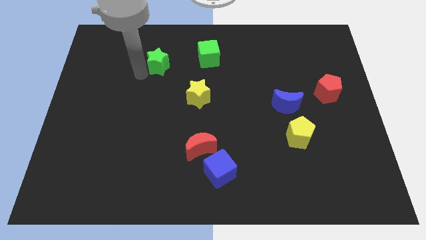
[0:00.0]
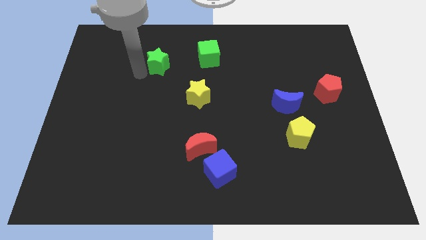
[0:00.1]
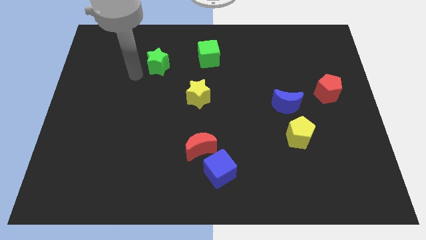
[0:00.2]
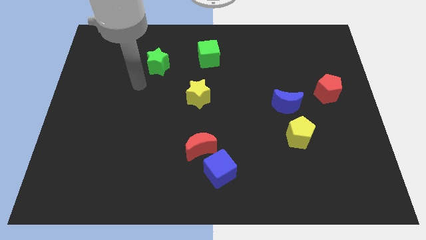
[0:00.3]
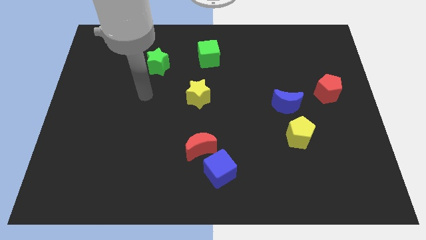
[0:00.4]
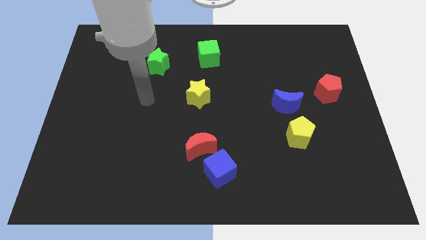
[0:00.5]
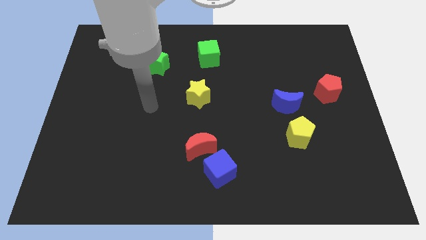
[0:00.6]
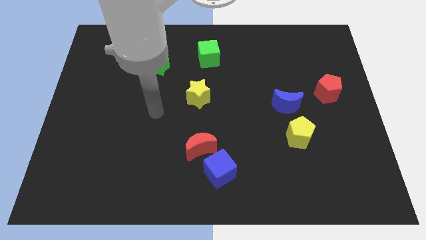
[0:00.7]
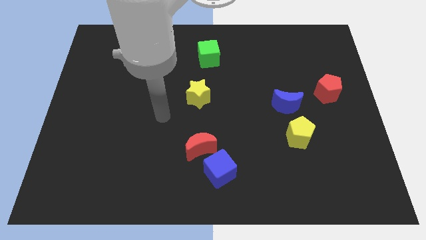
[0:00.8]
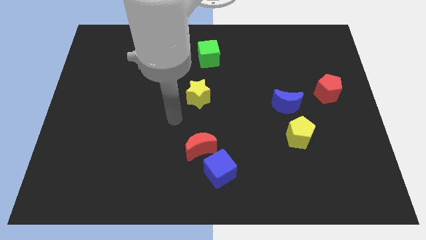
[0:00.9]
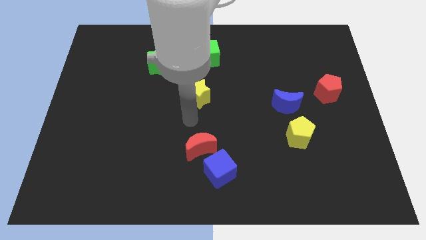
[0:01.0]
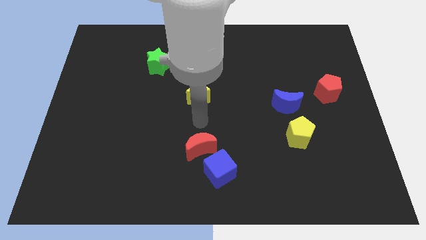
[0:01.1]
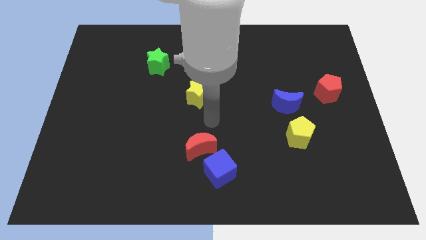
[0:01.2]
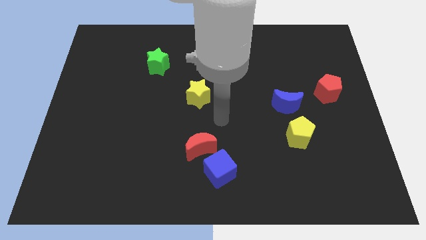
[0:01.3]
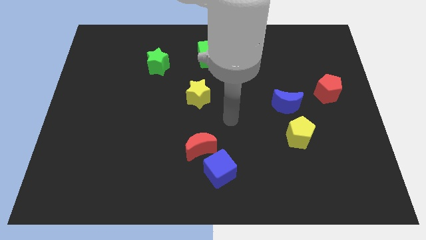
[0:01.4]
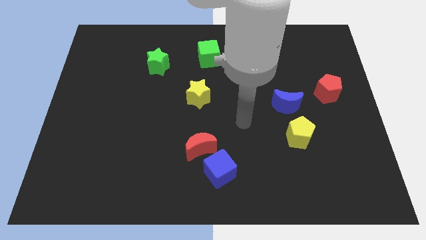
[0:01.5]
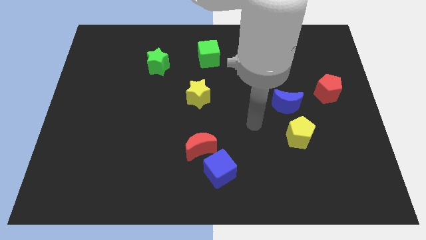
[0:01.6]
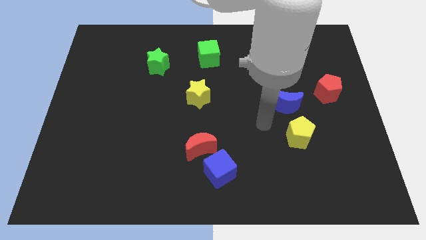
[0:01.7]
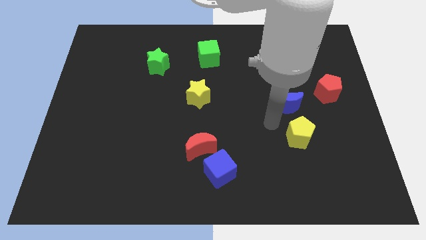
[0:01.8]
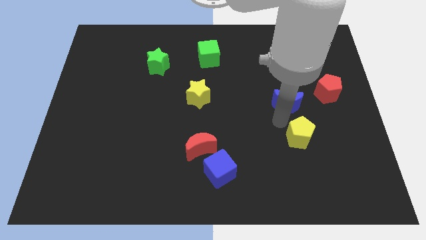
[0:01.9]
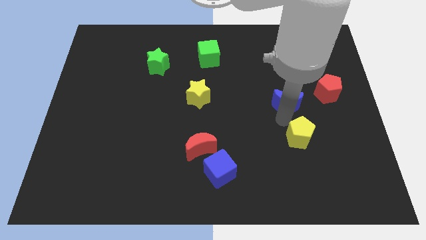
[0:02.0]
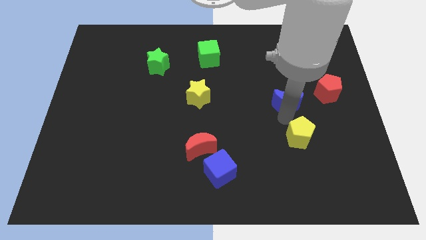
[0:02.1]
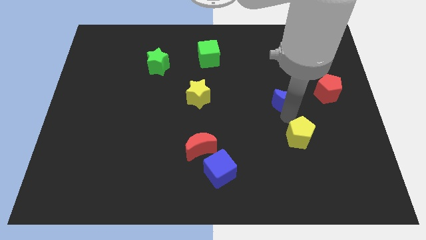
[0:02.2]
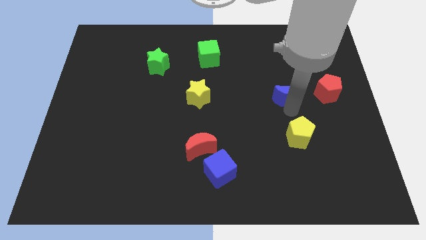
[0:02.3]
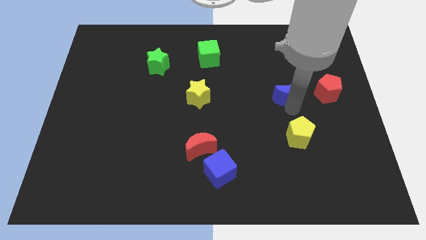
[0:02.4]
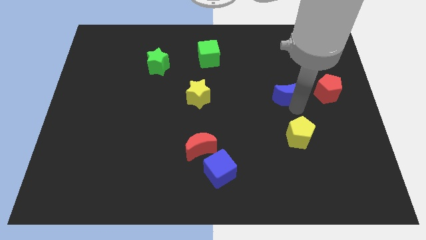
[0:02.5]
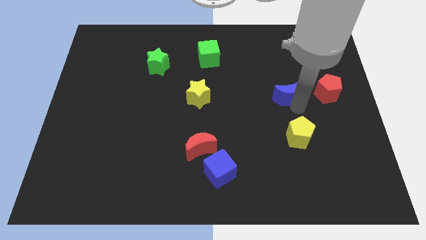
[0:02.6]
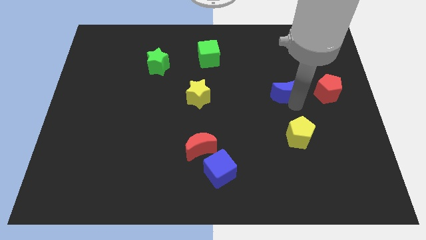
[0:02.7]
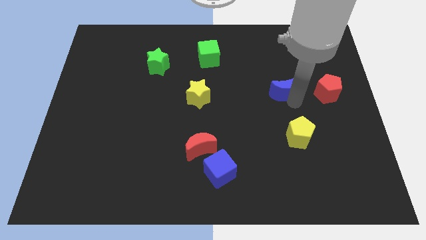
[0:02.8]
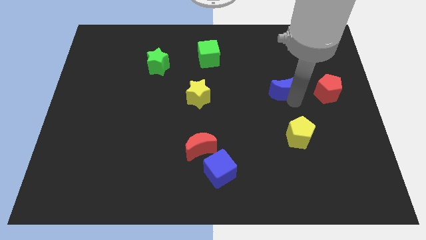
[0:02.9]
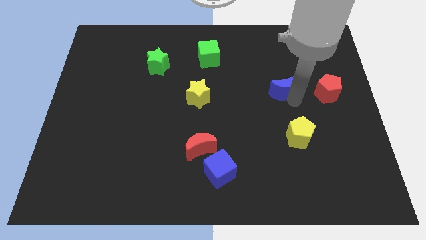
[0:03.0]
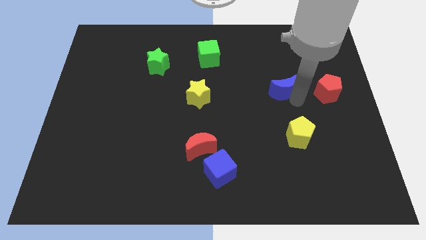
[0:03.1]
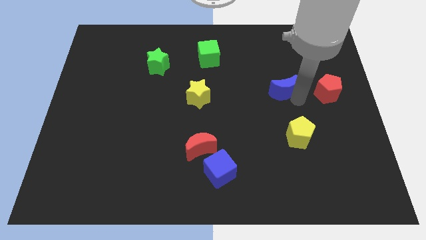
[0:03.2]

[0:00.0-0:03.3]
push the blue crescent to the left of the red pentagon

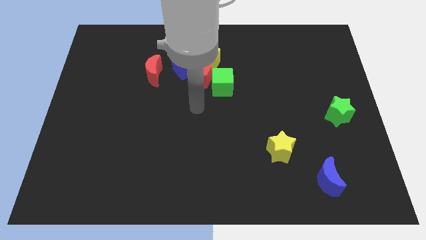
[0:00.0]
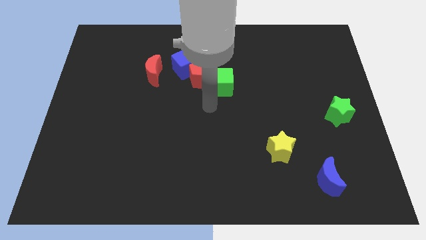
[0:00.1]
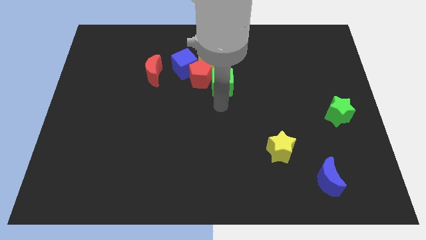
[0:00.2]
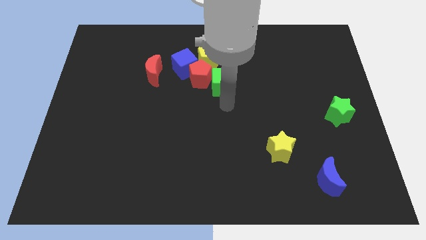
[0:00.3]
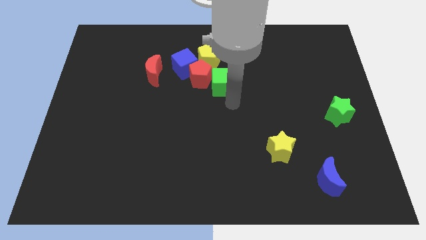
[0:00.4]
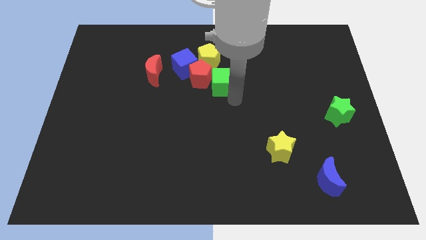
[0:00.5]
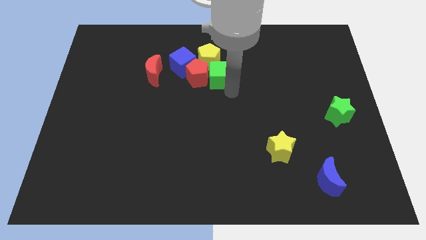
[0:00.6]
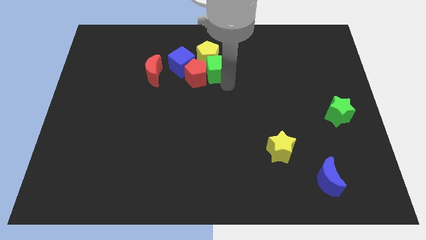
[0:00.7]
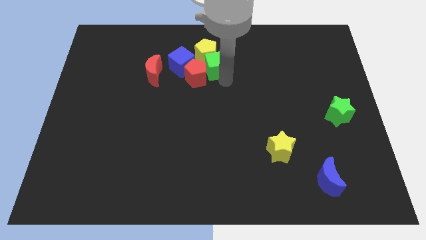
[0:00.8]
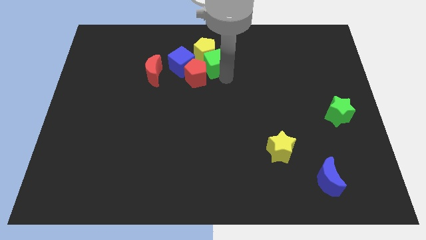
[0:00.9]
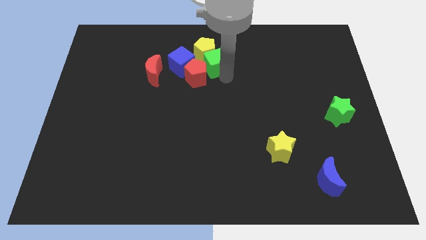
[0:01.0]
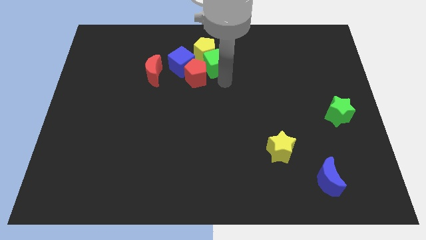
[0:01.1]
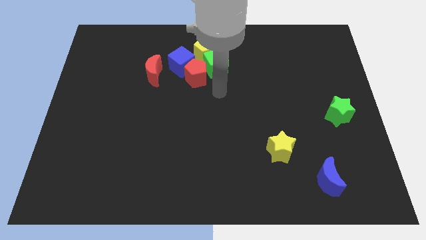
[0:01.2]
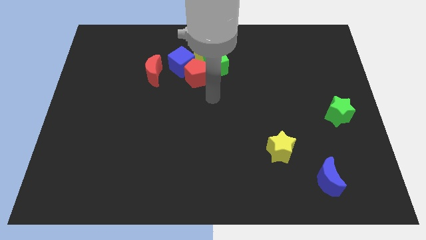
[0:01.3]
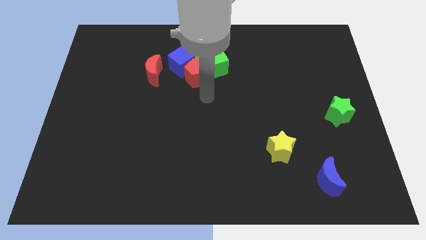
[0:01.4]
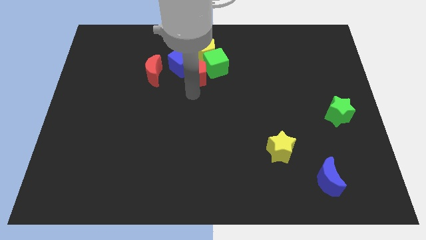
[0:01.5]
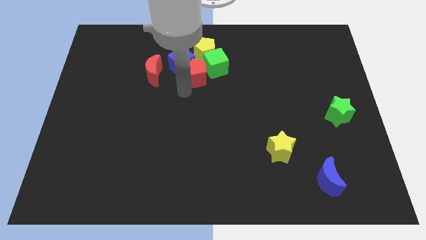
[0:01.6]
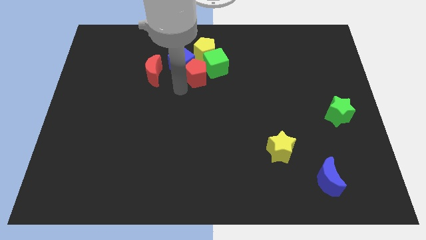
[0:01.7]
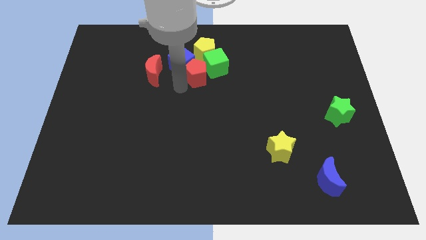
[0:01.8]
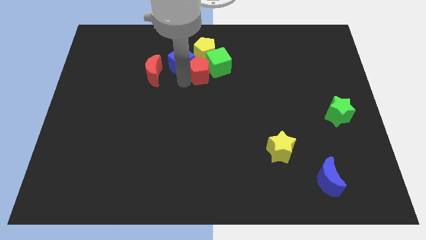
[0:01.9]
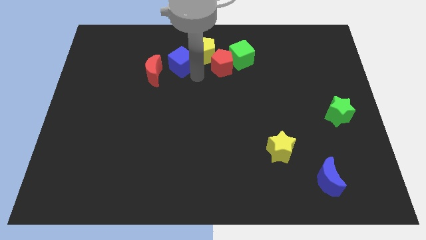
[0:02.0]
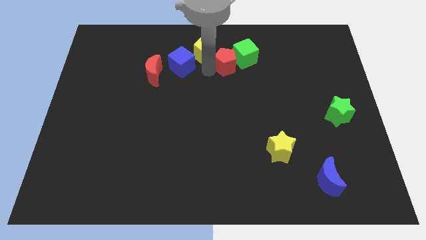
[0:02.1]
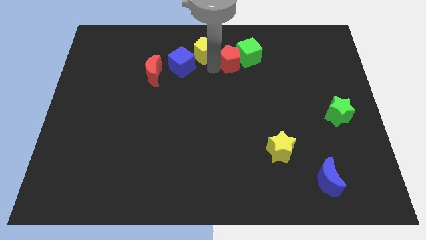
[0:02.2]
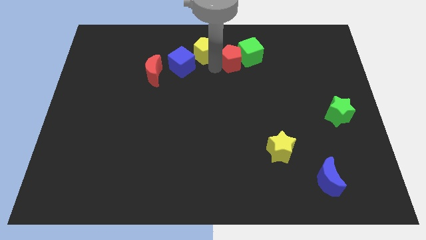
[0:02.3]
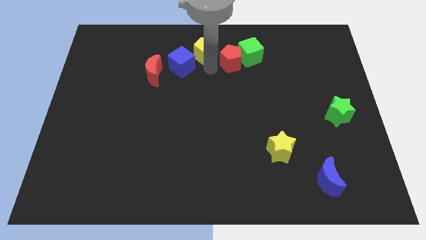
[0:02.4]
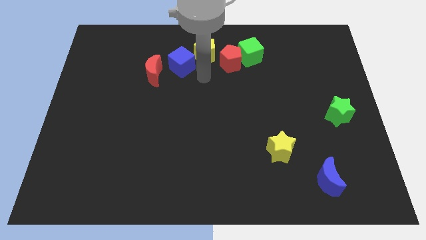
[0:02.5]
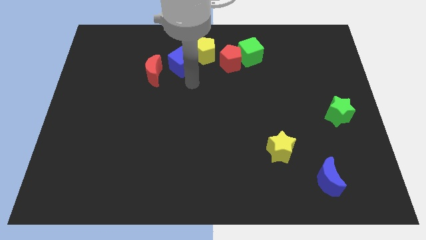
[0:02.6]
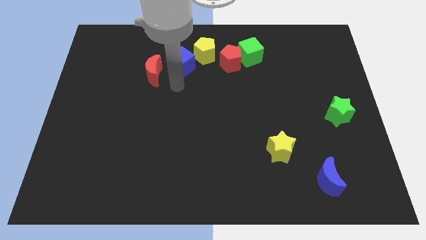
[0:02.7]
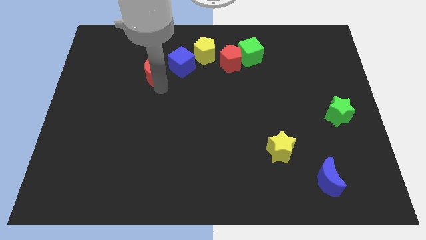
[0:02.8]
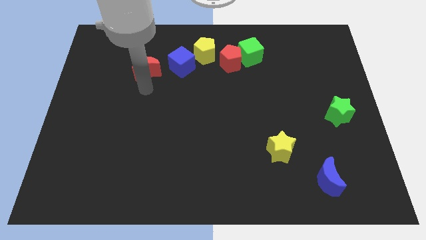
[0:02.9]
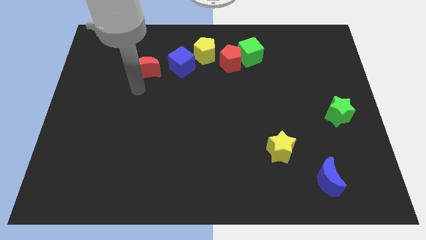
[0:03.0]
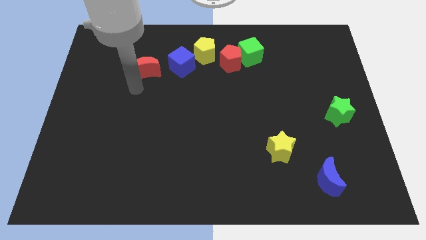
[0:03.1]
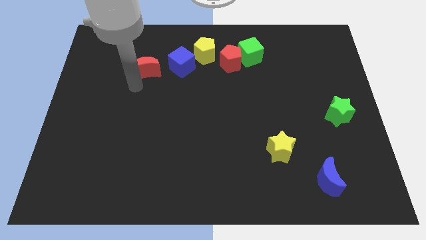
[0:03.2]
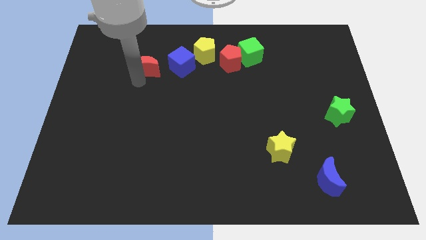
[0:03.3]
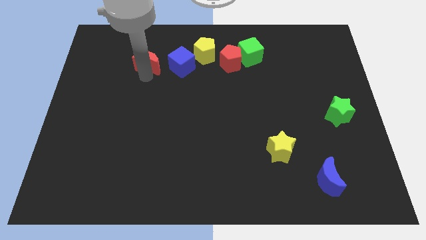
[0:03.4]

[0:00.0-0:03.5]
separate the green cube from the yellow pentagon along with the red pentagon

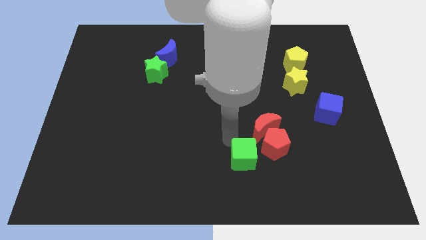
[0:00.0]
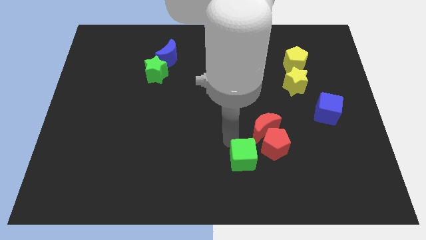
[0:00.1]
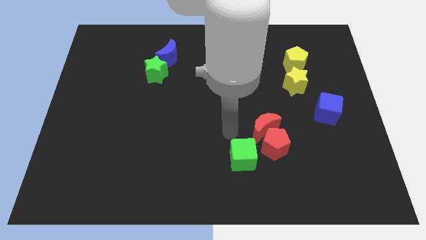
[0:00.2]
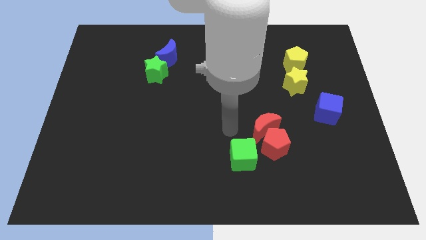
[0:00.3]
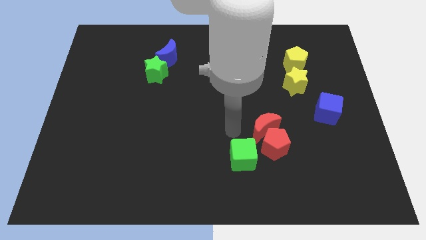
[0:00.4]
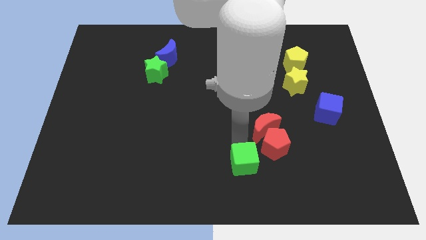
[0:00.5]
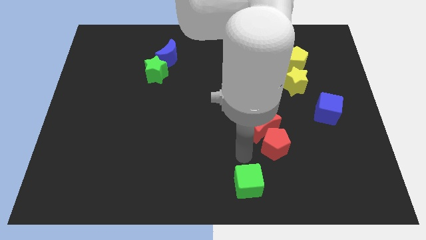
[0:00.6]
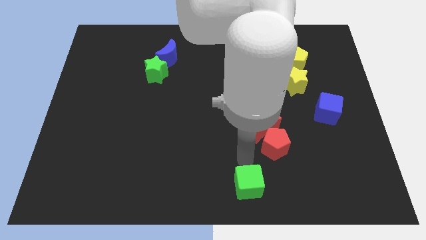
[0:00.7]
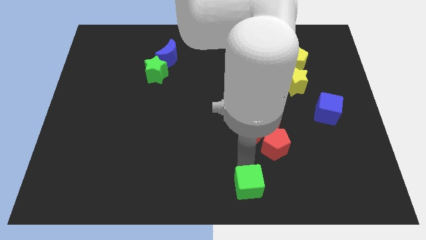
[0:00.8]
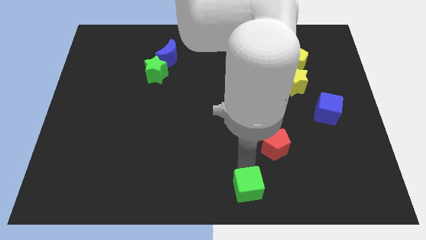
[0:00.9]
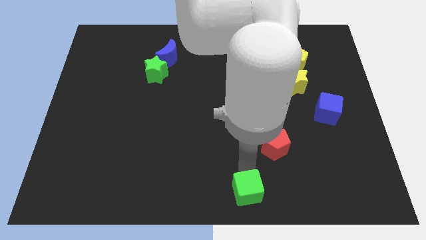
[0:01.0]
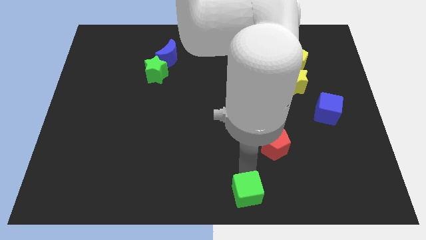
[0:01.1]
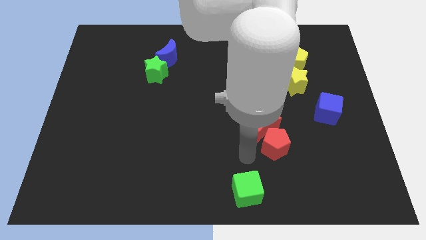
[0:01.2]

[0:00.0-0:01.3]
move the green cube near to the bottom center of the board

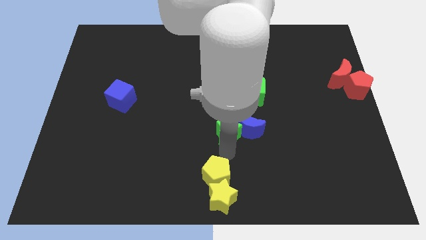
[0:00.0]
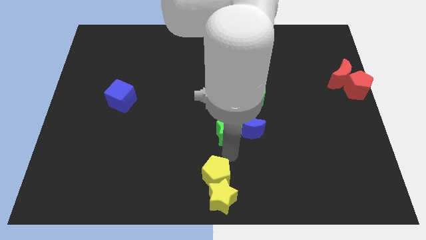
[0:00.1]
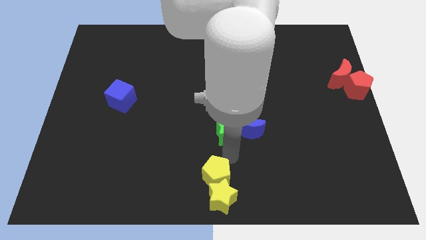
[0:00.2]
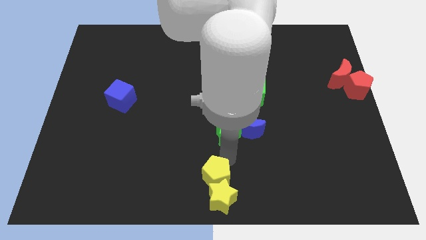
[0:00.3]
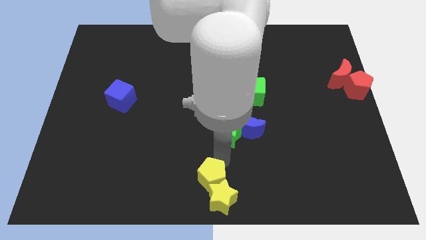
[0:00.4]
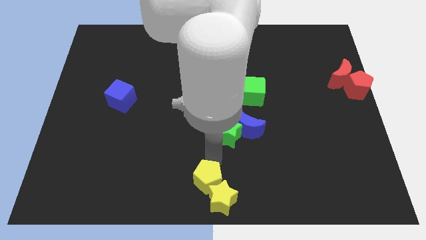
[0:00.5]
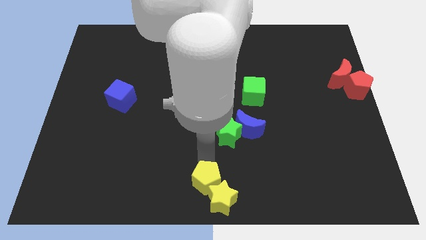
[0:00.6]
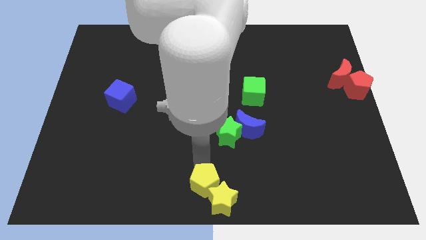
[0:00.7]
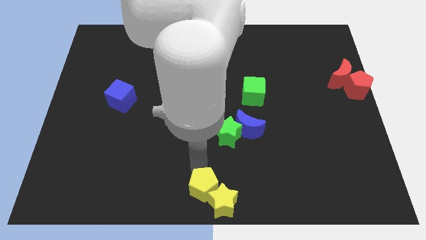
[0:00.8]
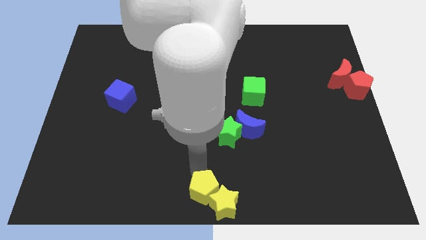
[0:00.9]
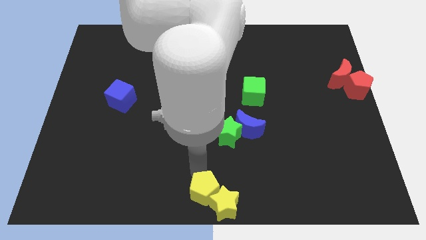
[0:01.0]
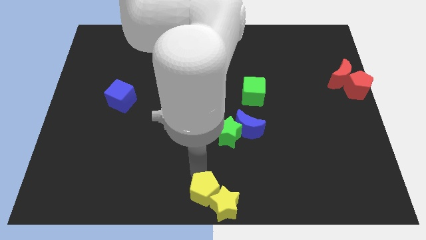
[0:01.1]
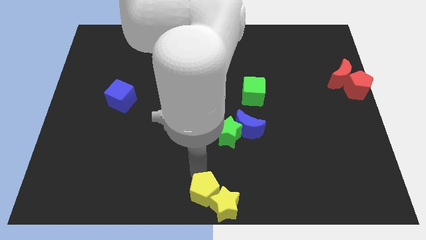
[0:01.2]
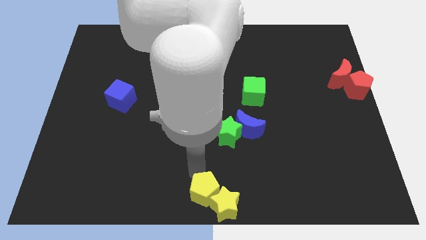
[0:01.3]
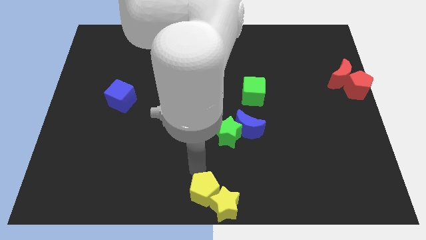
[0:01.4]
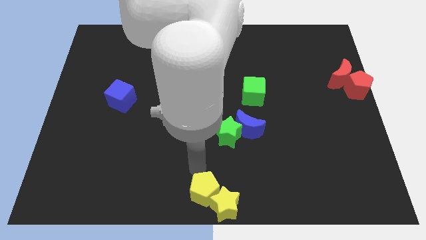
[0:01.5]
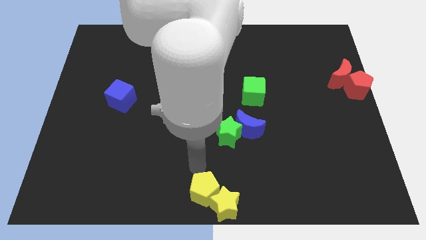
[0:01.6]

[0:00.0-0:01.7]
push the yellow star slightly with the yellow pentagon
